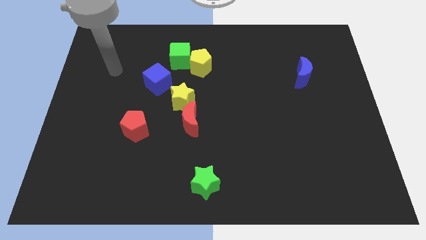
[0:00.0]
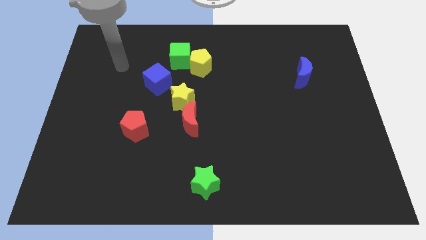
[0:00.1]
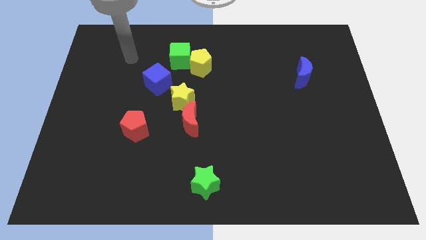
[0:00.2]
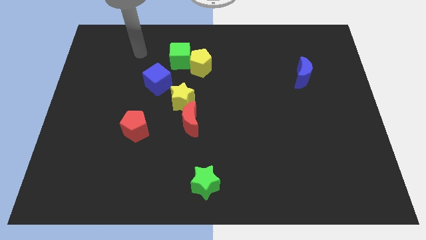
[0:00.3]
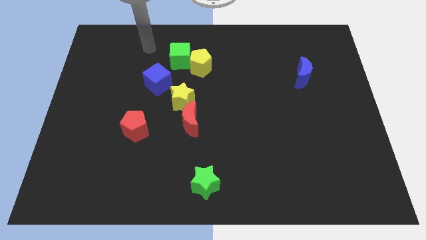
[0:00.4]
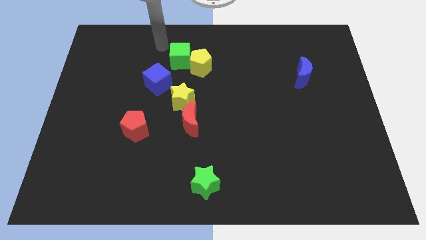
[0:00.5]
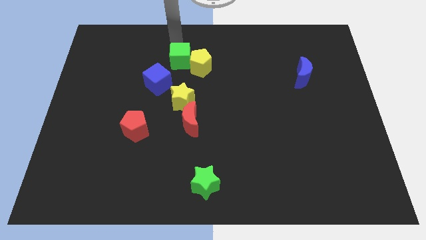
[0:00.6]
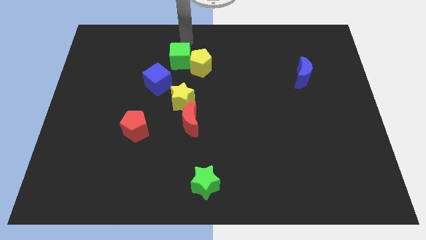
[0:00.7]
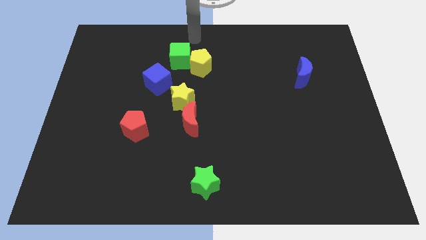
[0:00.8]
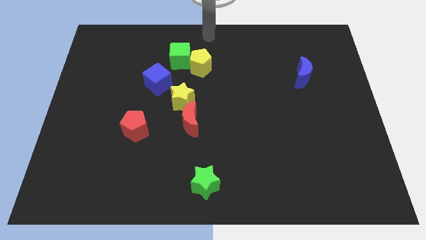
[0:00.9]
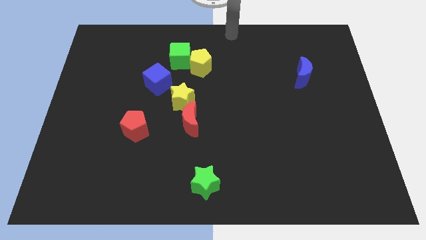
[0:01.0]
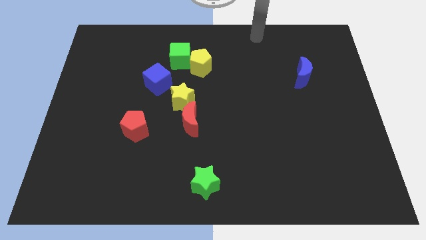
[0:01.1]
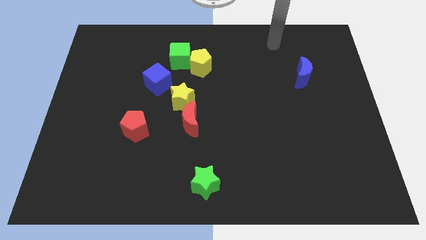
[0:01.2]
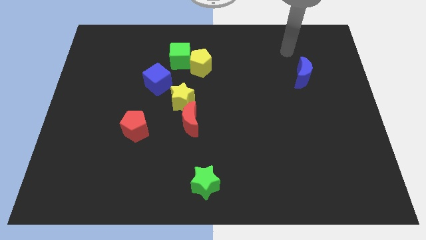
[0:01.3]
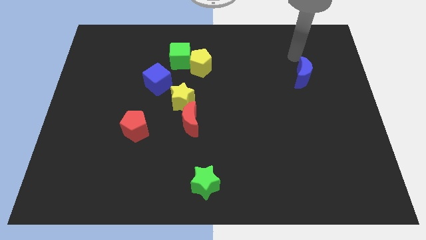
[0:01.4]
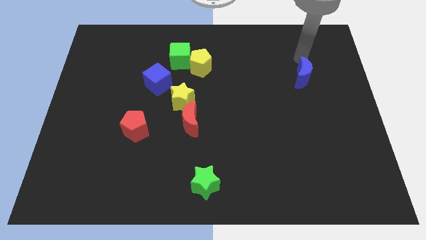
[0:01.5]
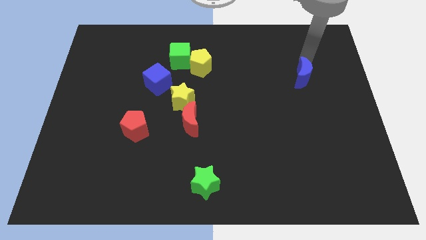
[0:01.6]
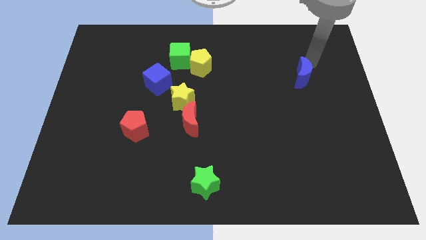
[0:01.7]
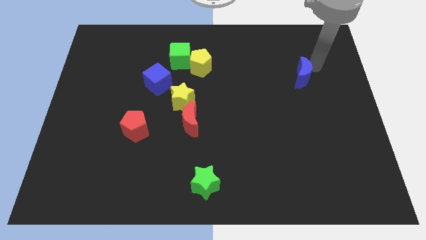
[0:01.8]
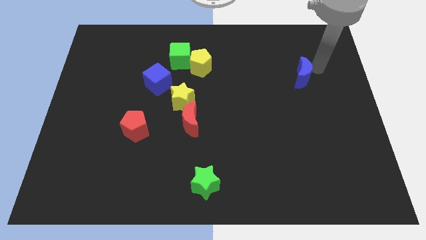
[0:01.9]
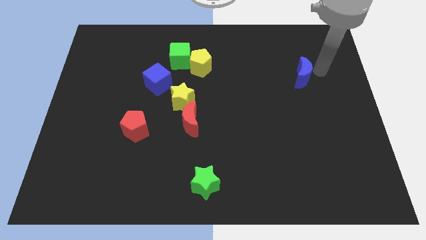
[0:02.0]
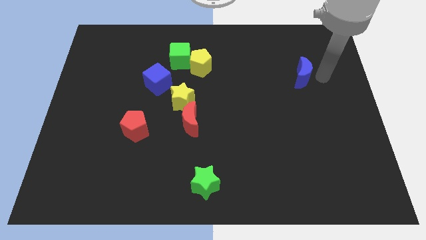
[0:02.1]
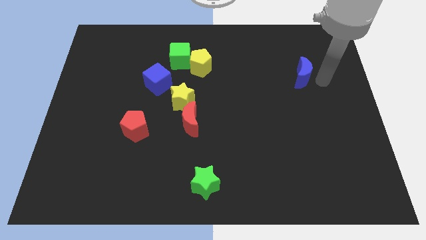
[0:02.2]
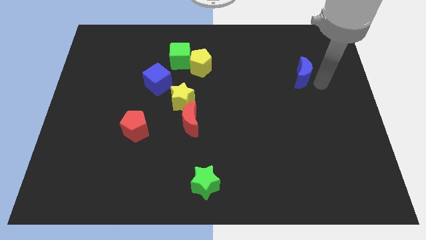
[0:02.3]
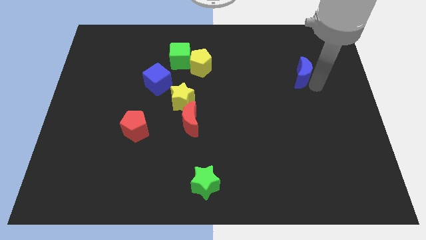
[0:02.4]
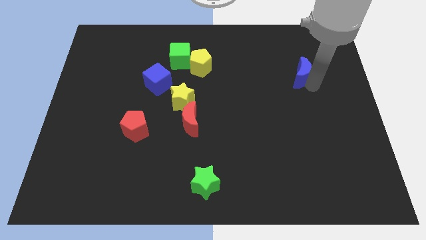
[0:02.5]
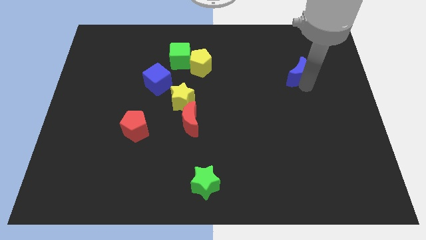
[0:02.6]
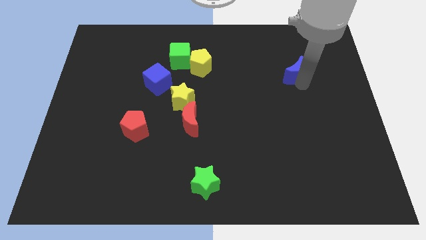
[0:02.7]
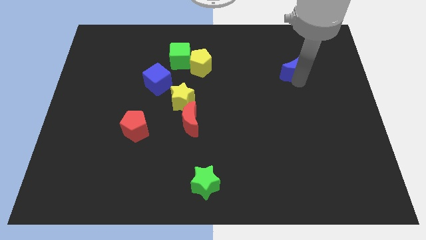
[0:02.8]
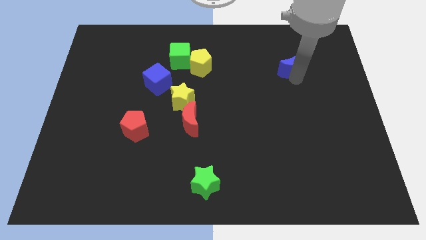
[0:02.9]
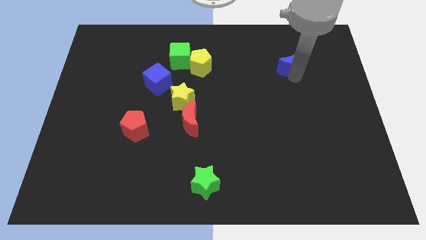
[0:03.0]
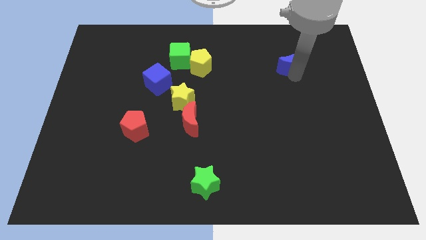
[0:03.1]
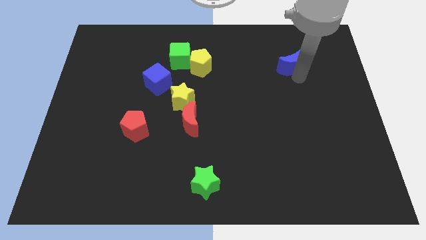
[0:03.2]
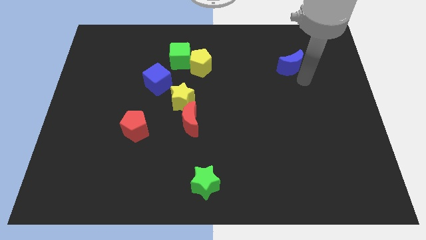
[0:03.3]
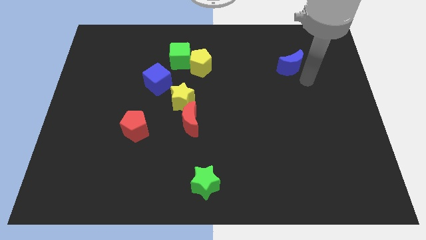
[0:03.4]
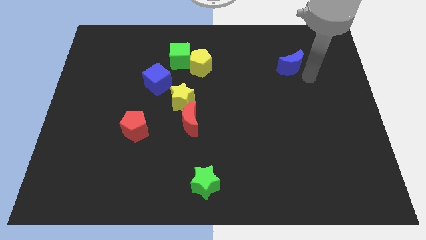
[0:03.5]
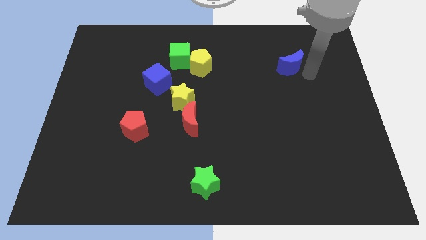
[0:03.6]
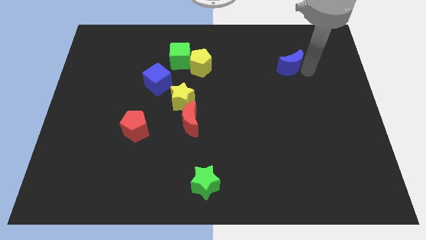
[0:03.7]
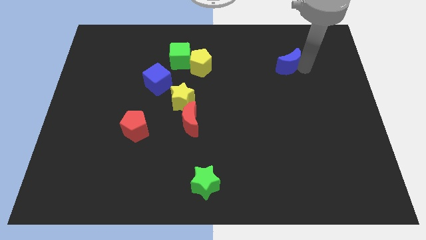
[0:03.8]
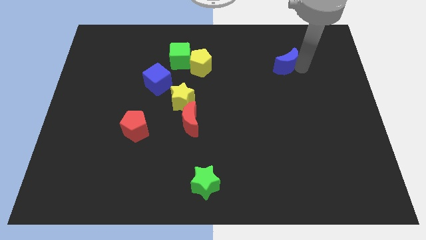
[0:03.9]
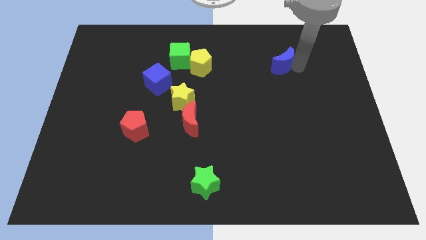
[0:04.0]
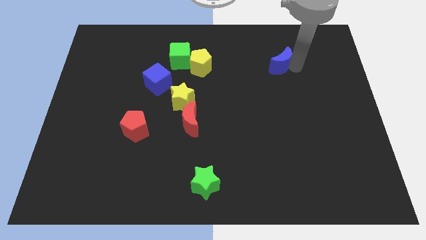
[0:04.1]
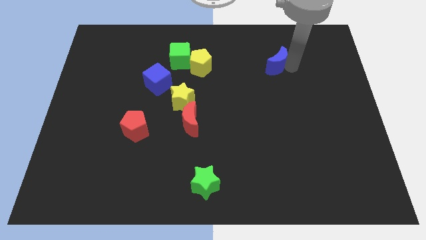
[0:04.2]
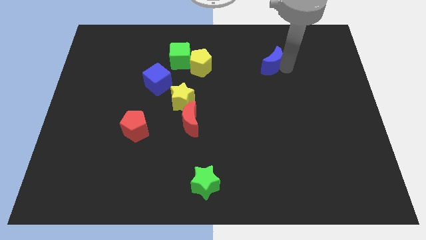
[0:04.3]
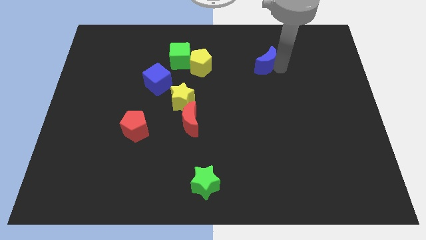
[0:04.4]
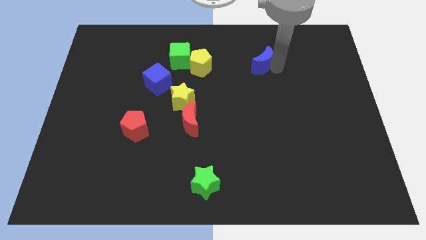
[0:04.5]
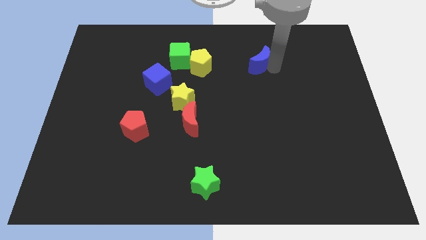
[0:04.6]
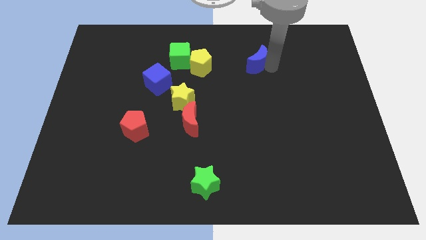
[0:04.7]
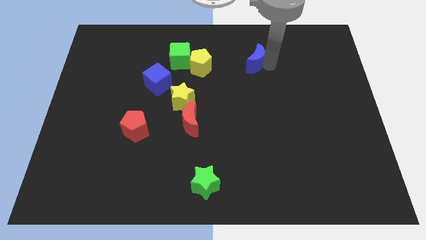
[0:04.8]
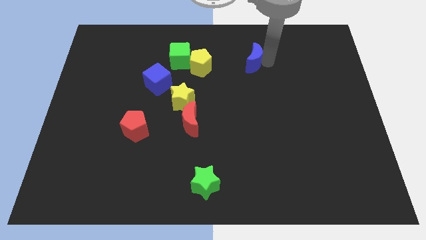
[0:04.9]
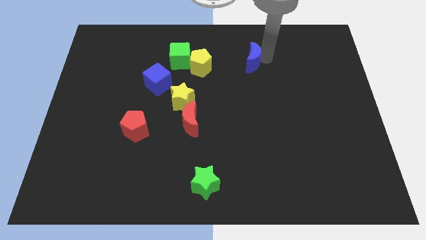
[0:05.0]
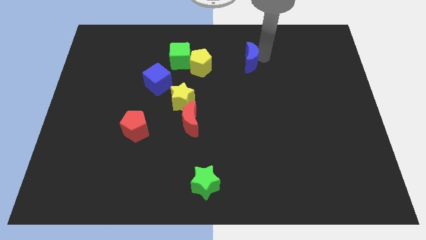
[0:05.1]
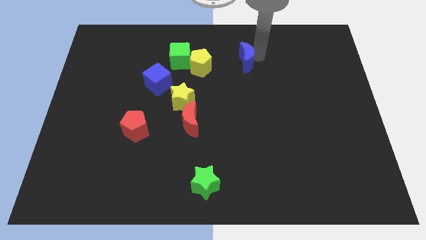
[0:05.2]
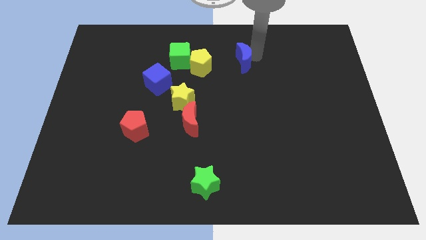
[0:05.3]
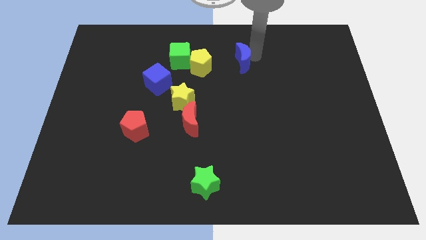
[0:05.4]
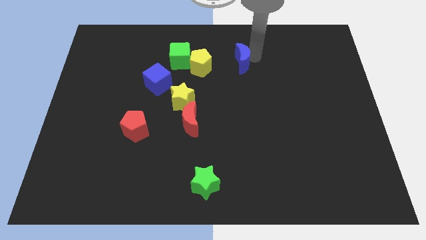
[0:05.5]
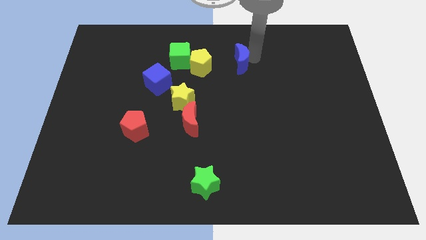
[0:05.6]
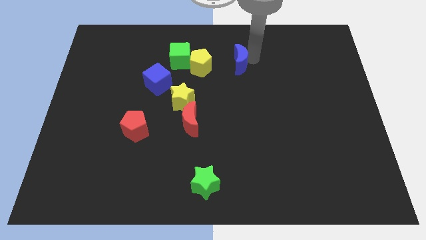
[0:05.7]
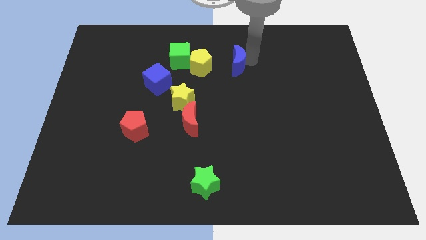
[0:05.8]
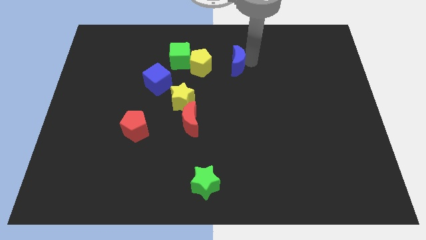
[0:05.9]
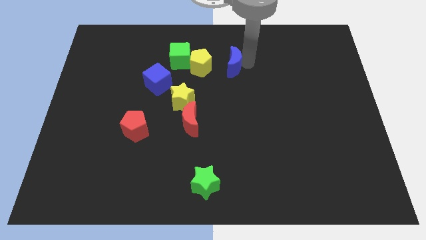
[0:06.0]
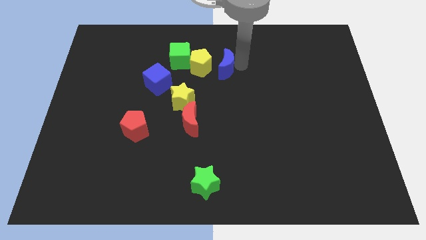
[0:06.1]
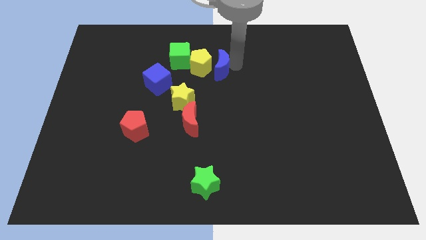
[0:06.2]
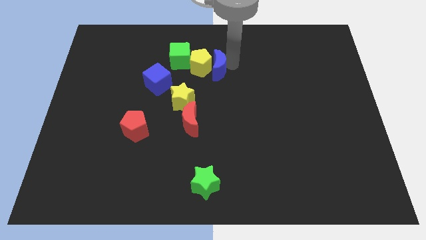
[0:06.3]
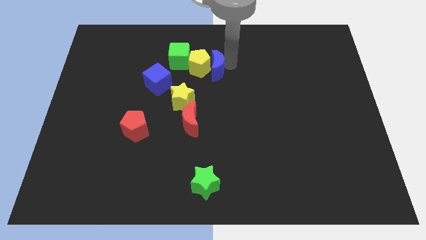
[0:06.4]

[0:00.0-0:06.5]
slide the blue moon close to the yellow pentagon

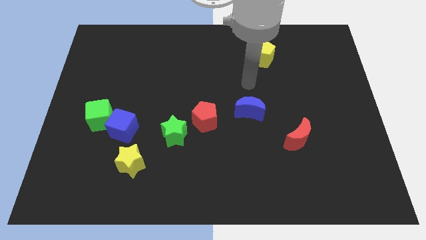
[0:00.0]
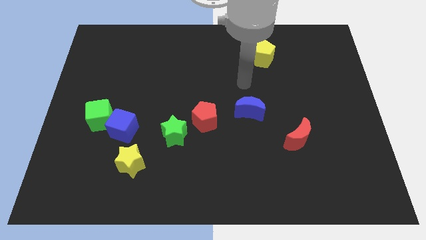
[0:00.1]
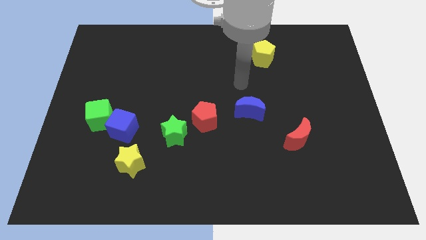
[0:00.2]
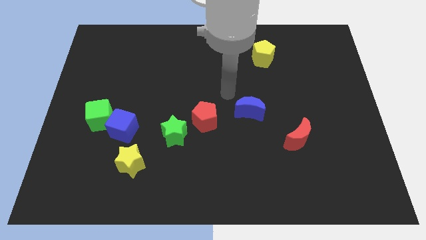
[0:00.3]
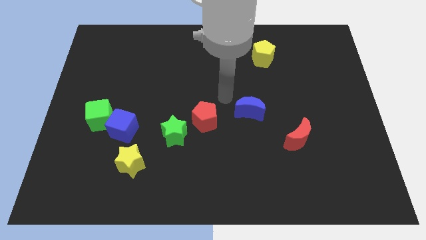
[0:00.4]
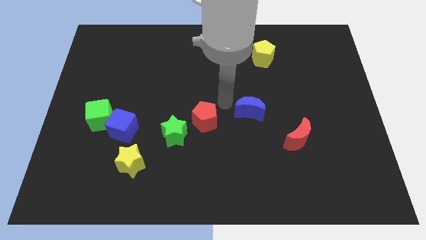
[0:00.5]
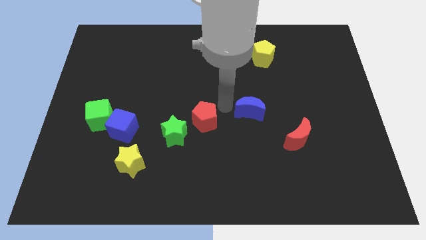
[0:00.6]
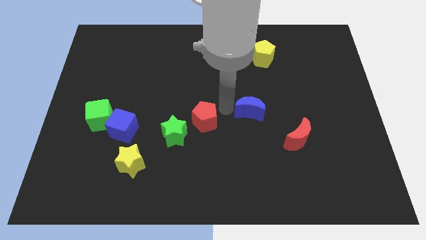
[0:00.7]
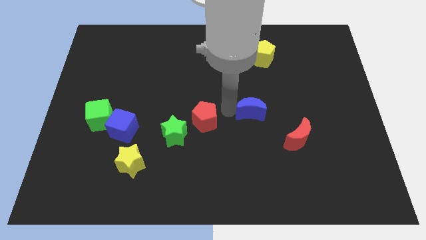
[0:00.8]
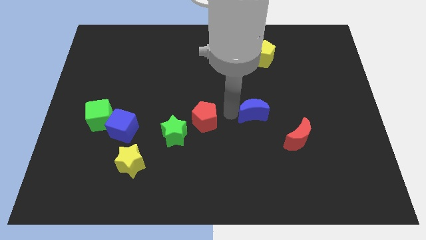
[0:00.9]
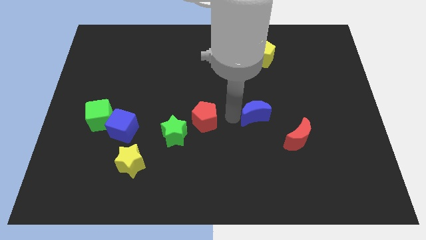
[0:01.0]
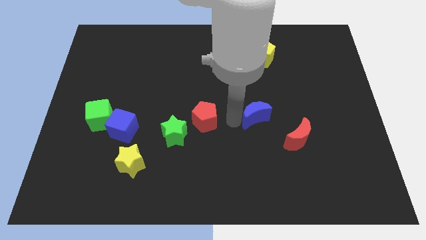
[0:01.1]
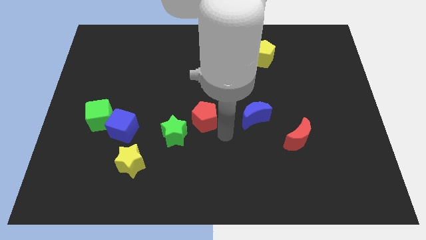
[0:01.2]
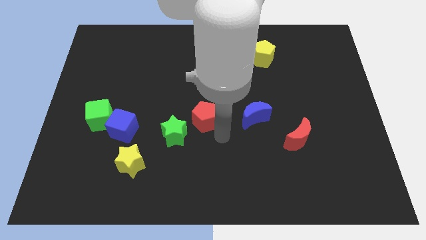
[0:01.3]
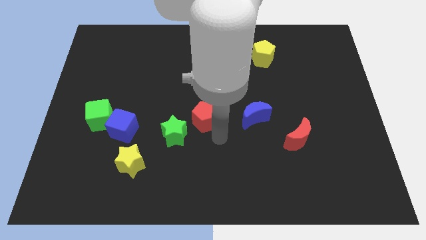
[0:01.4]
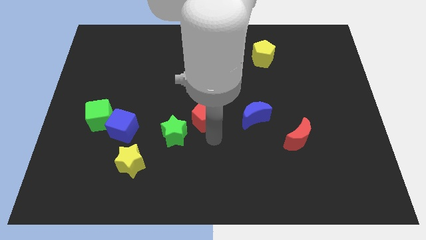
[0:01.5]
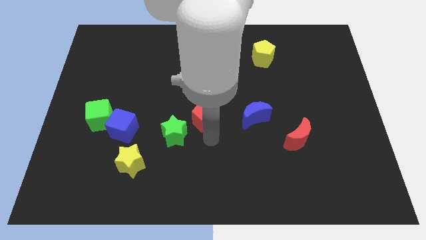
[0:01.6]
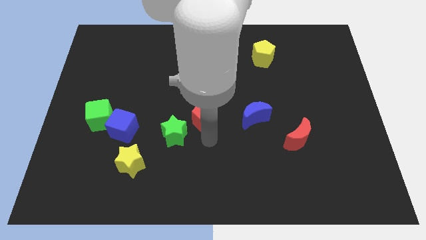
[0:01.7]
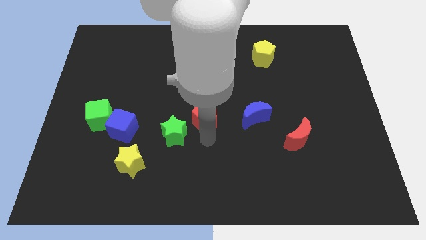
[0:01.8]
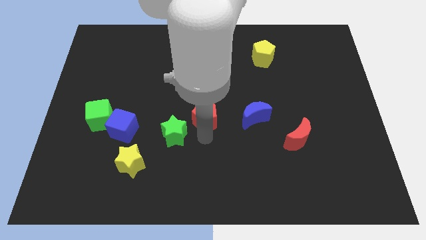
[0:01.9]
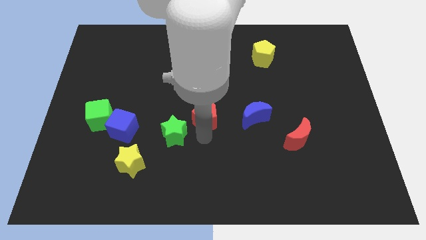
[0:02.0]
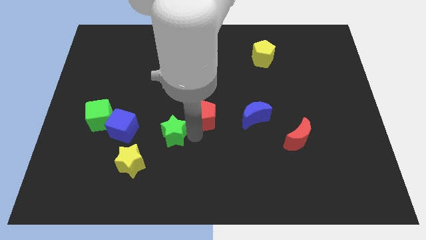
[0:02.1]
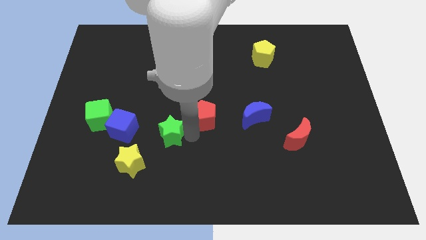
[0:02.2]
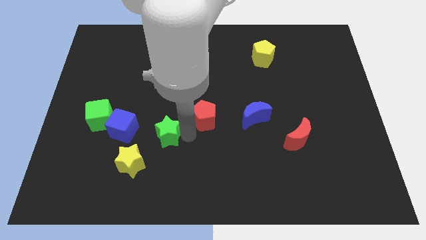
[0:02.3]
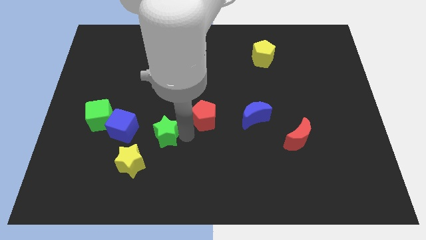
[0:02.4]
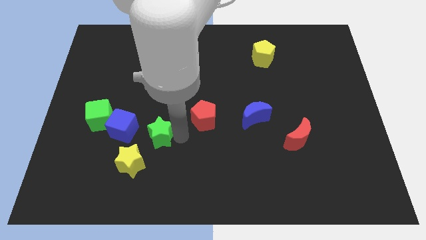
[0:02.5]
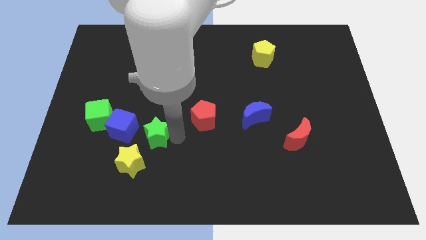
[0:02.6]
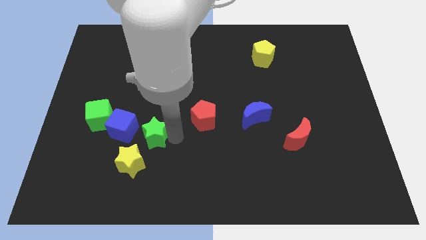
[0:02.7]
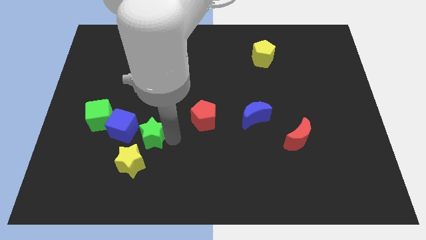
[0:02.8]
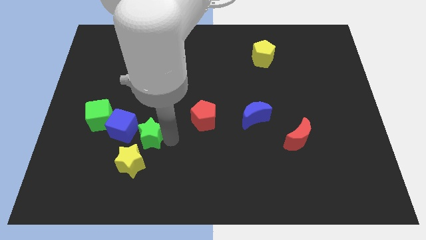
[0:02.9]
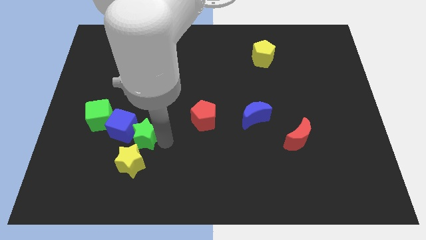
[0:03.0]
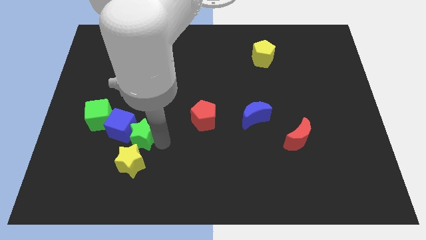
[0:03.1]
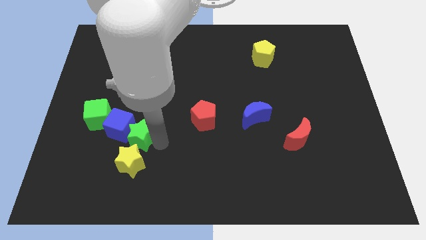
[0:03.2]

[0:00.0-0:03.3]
slide the green star close to the blue cube
